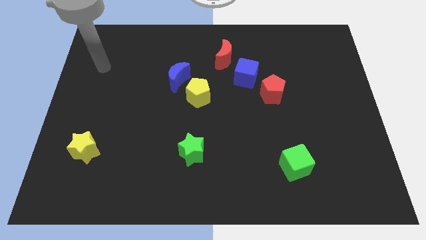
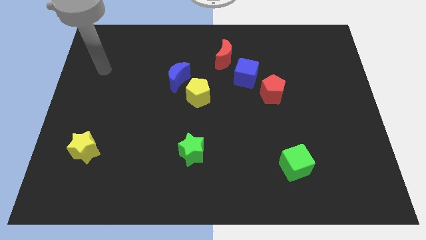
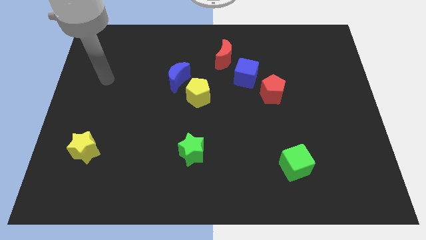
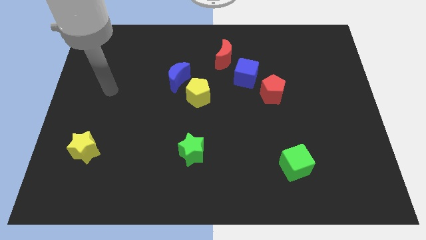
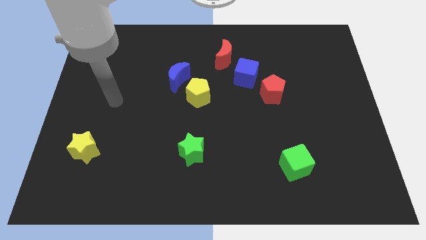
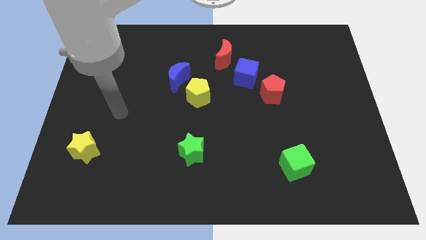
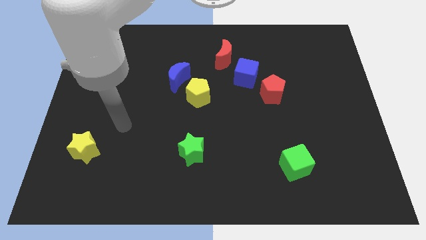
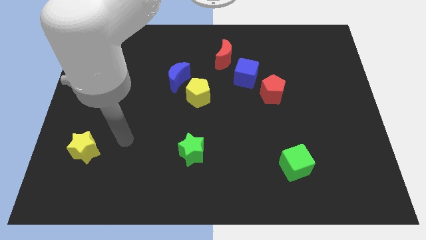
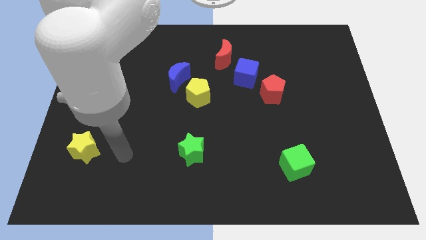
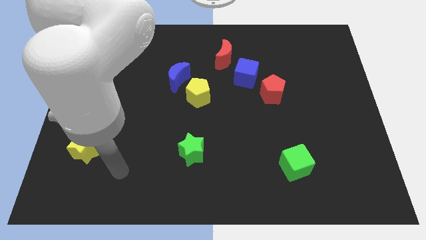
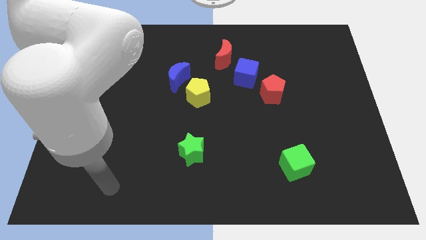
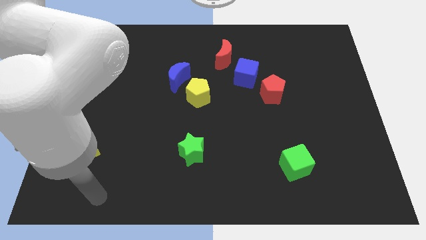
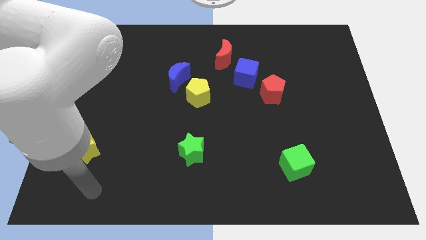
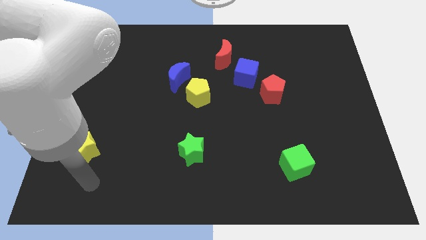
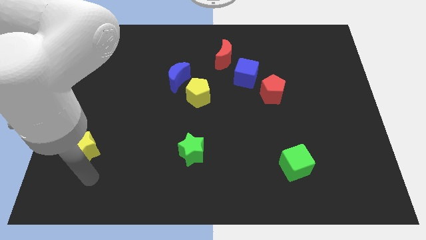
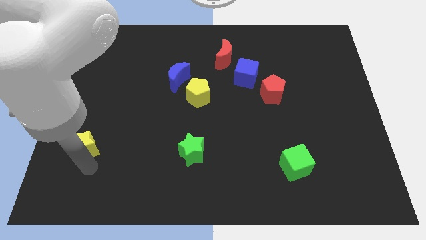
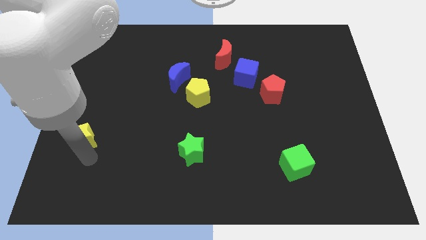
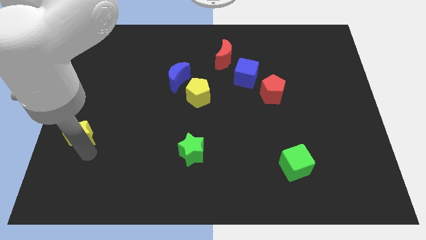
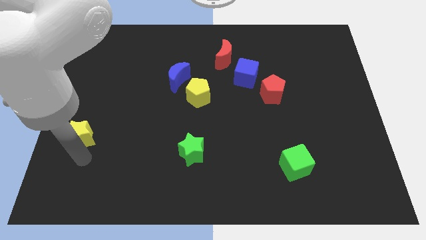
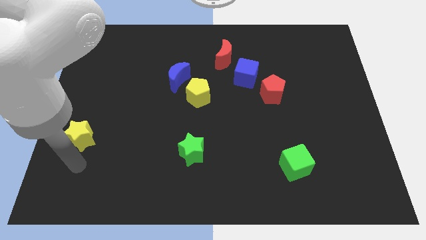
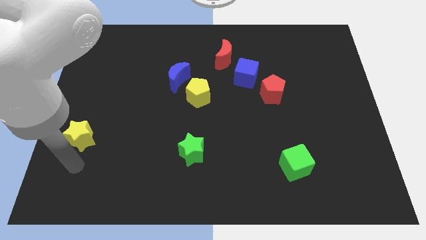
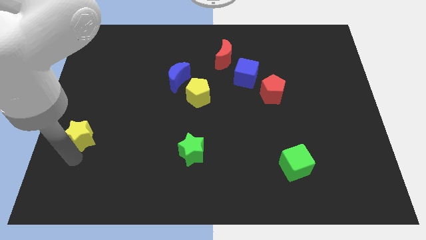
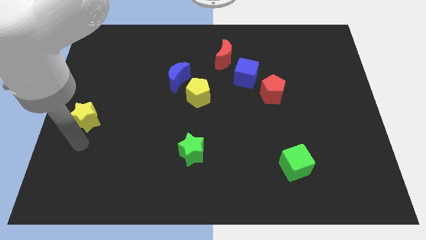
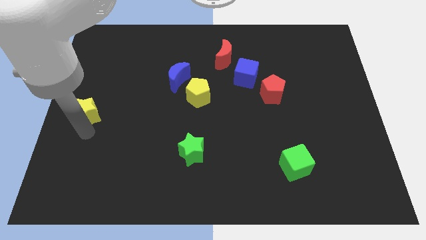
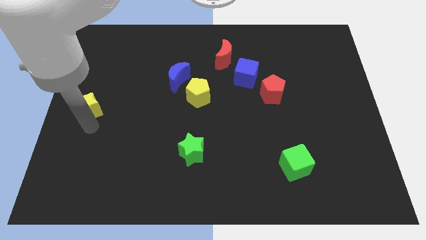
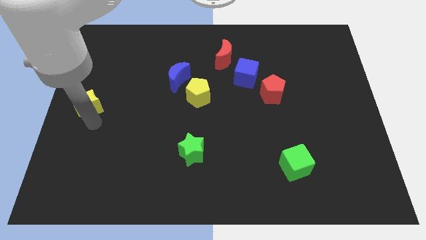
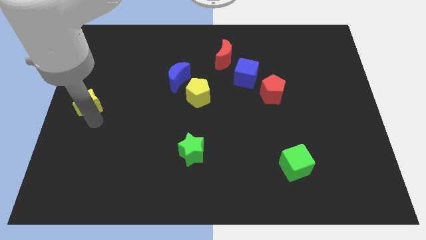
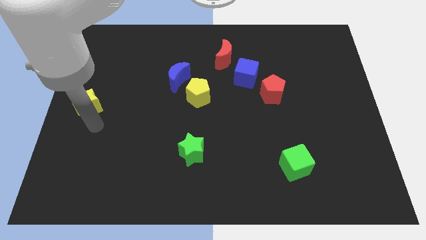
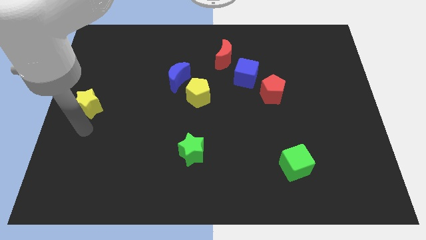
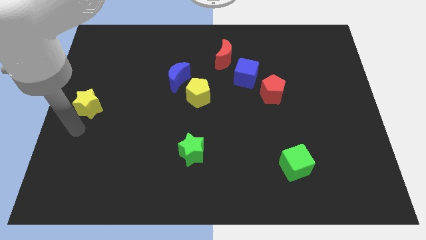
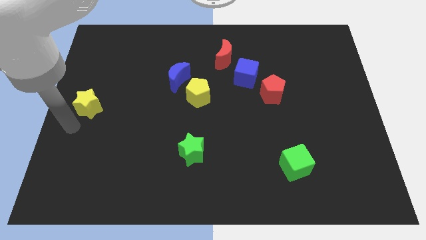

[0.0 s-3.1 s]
push the yellow star to the left center of the board

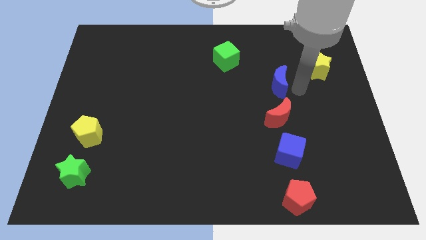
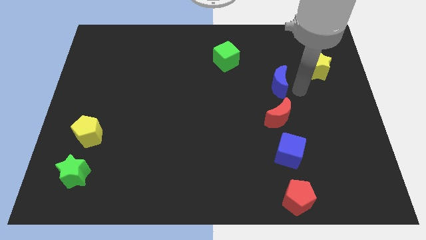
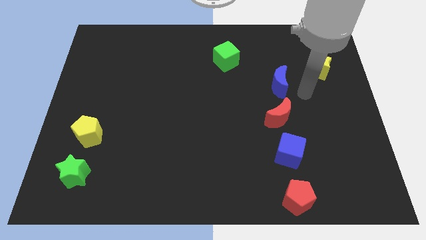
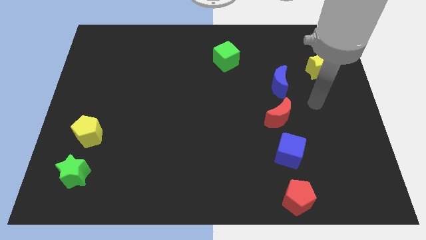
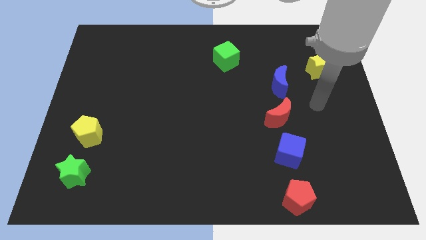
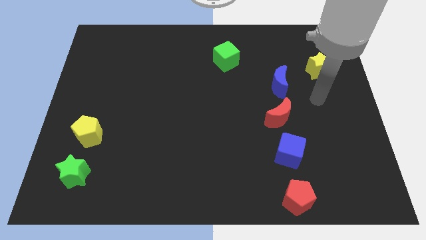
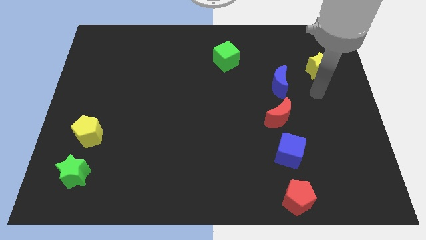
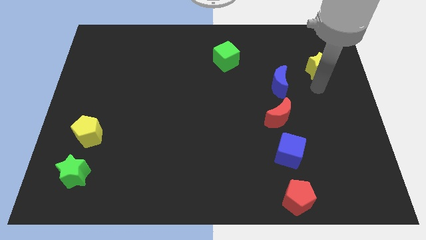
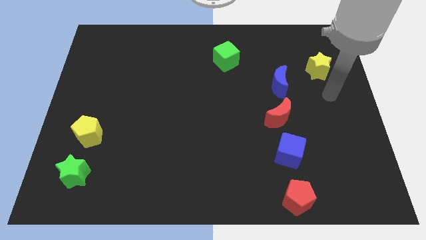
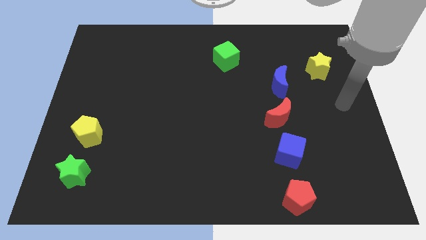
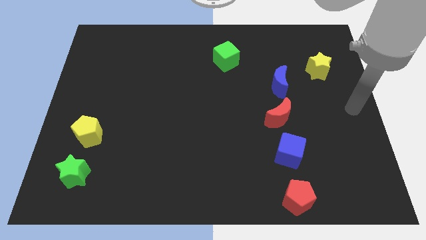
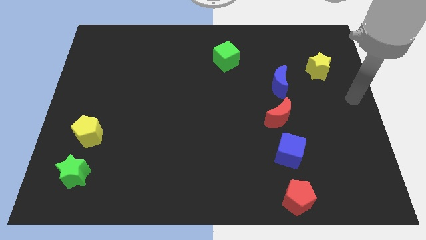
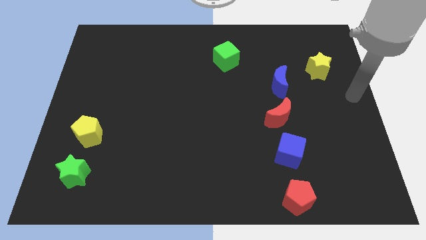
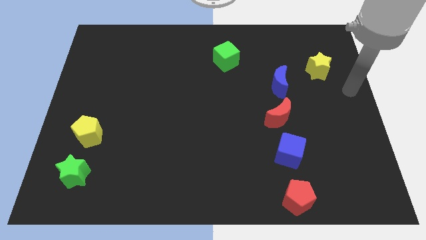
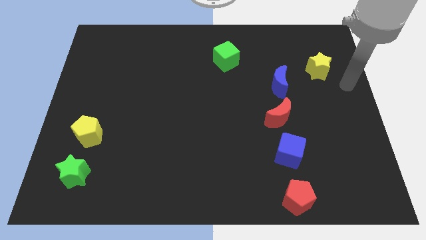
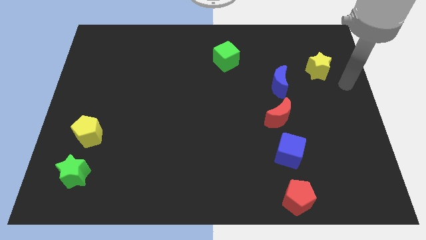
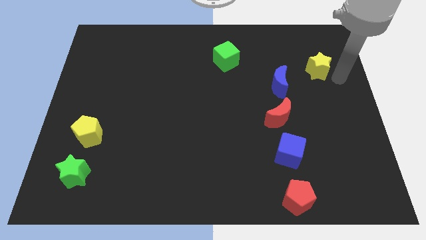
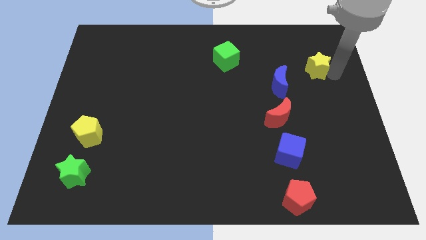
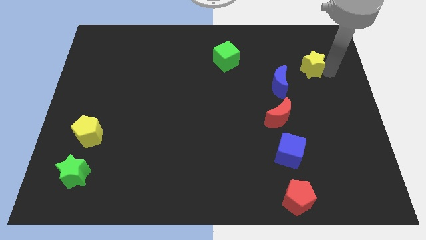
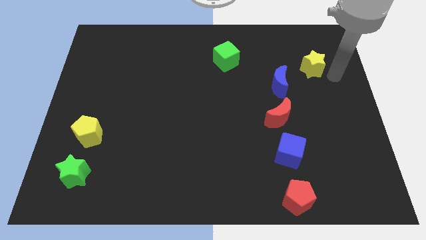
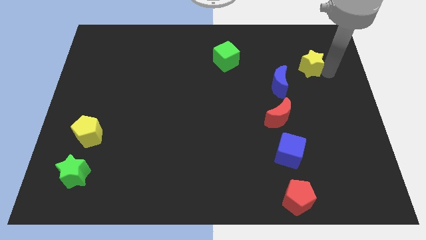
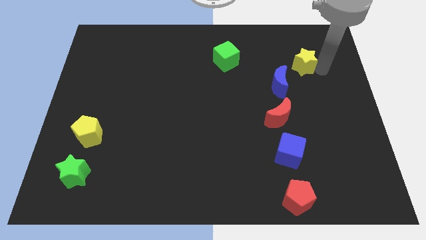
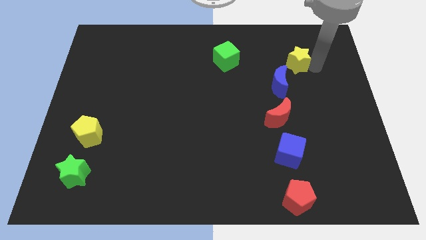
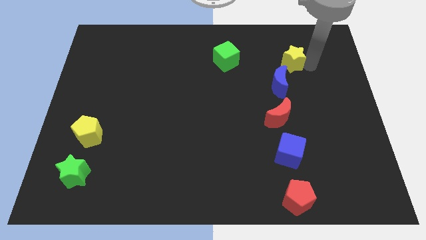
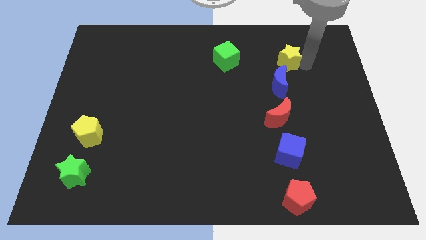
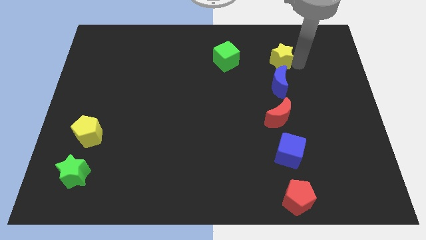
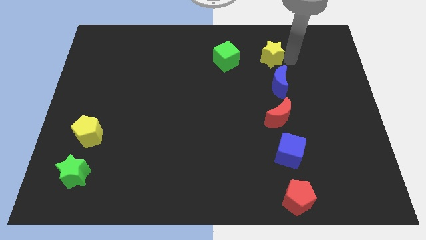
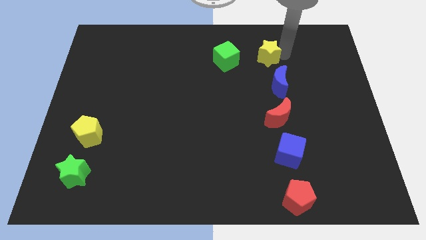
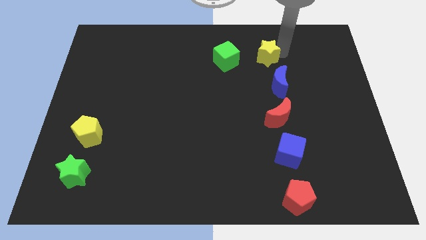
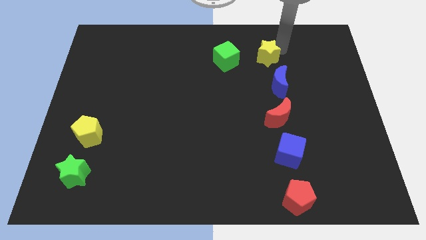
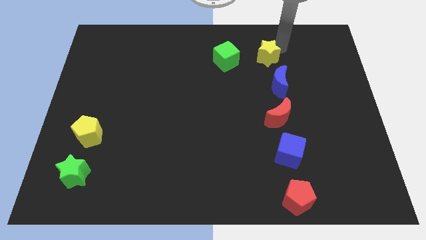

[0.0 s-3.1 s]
push the yellow star to the top left of the blue crescent

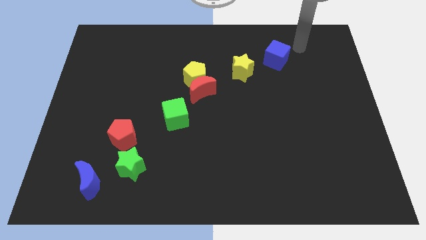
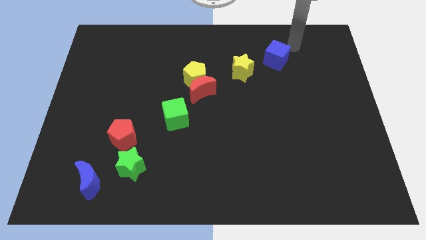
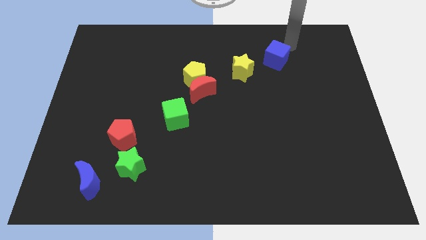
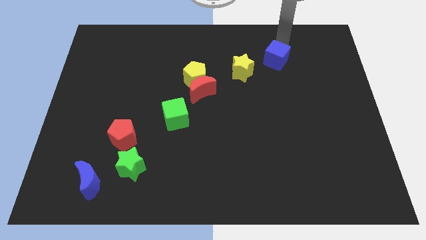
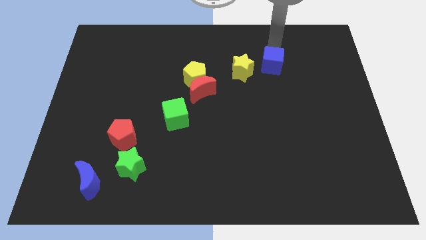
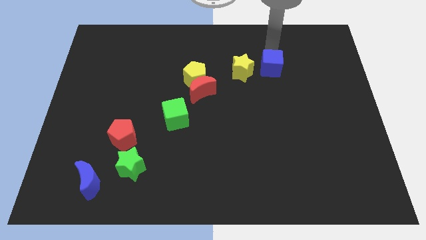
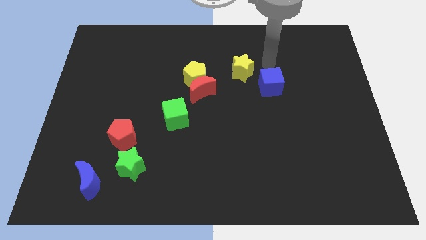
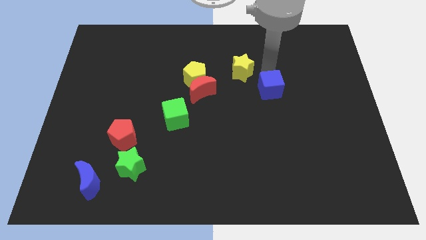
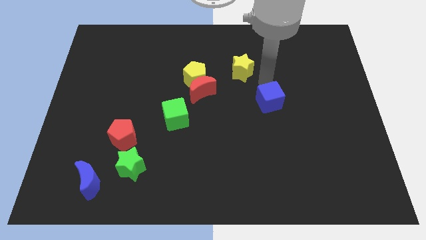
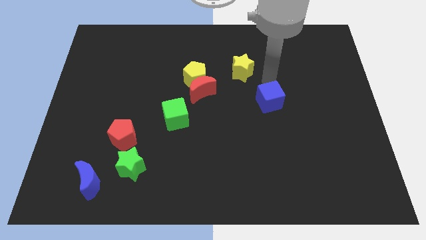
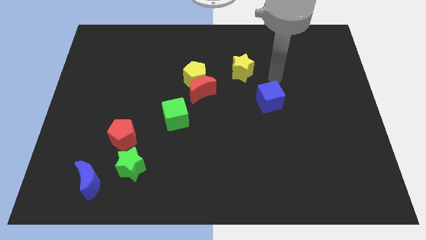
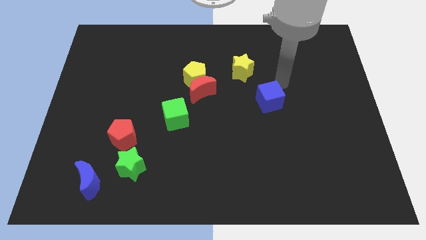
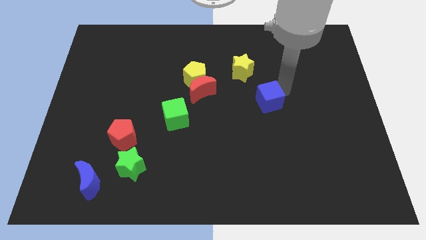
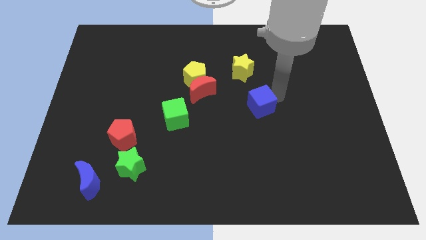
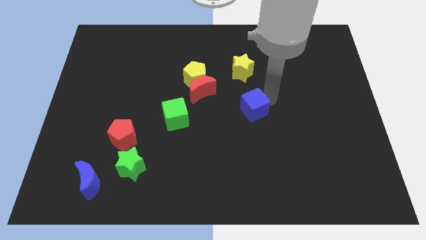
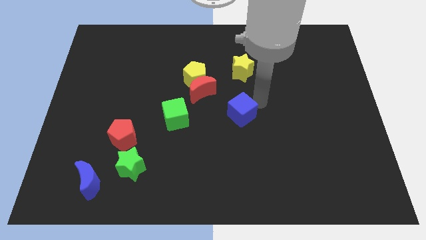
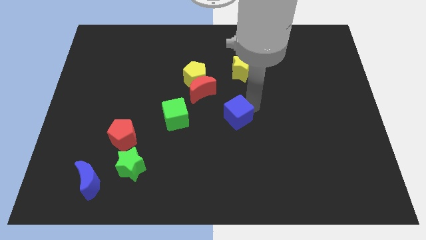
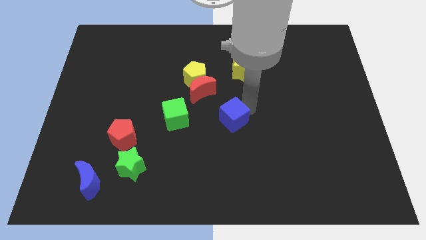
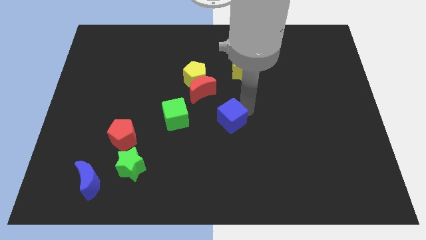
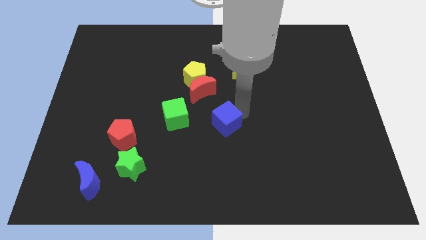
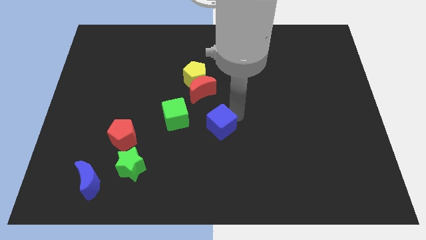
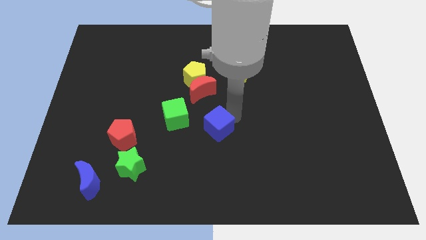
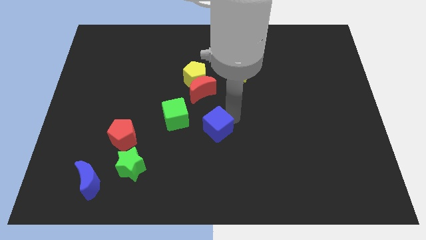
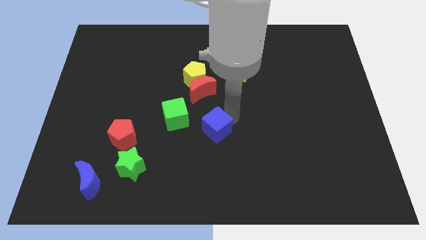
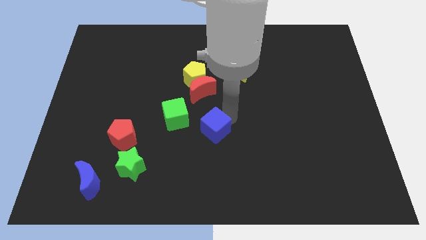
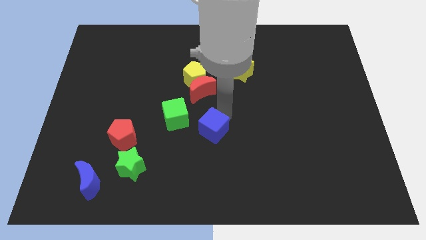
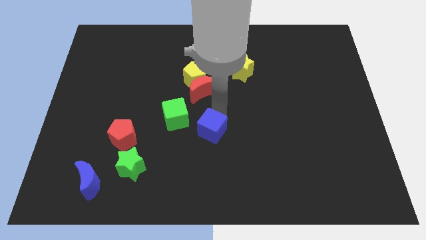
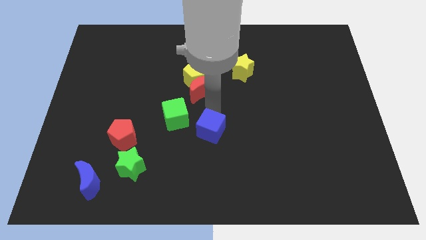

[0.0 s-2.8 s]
move the blue cube to the bottom of the red crescent
